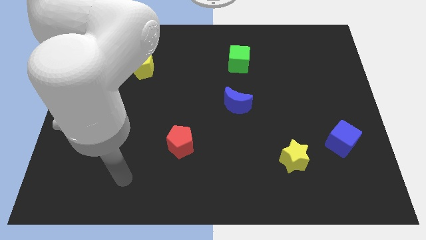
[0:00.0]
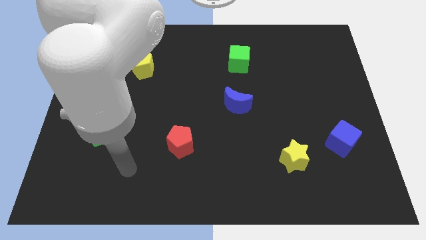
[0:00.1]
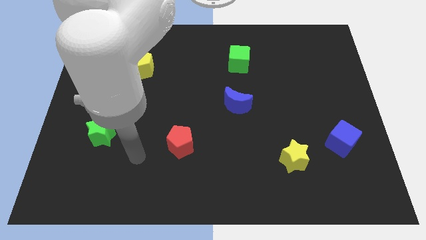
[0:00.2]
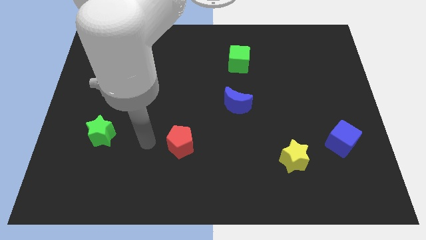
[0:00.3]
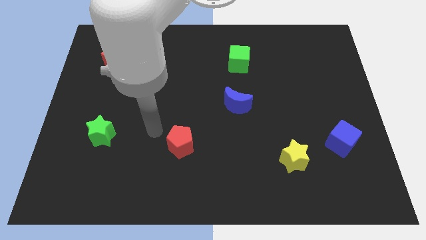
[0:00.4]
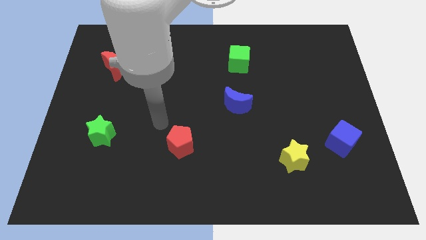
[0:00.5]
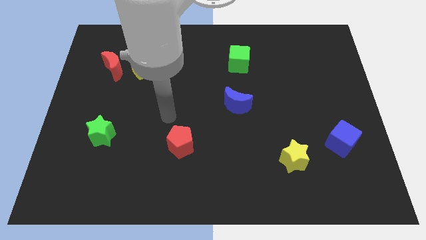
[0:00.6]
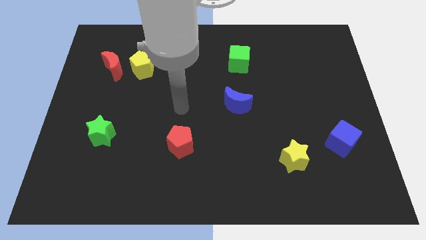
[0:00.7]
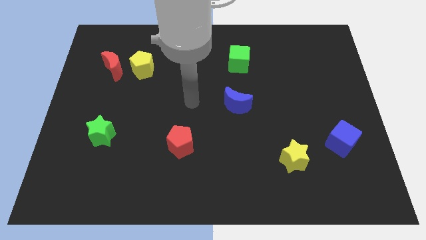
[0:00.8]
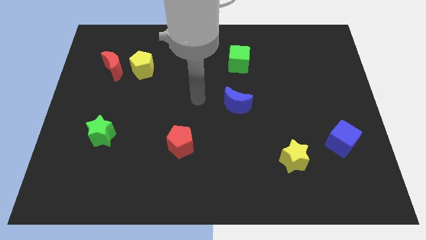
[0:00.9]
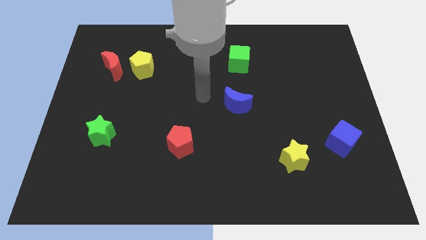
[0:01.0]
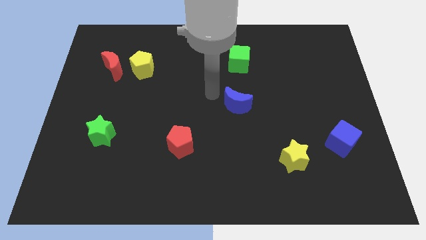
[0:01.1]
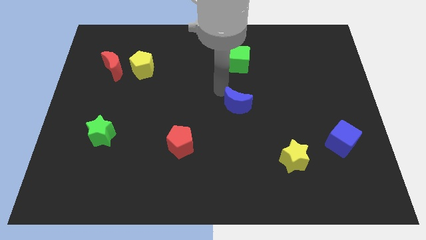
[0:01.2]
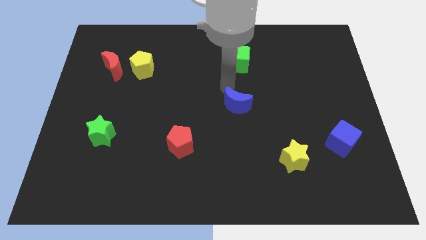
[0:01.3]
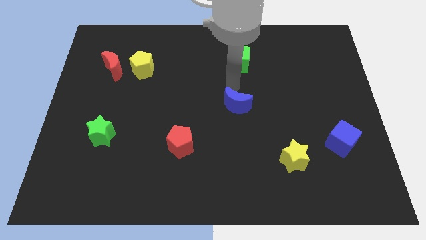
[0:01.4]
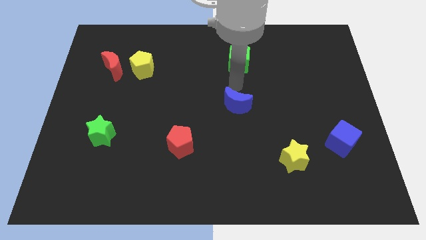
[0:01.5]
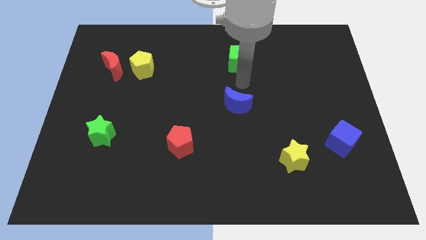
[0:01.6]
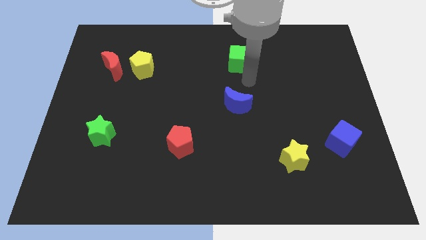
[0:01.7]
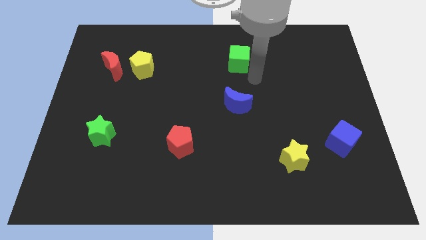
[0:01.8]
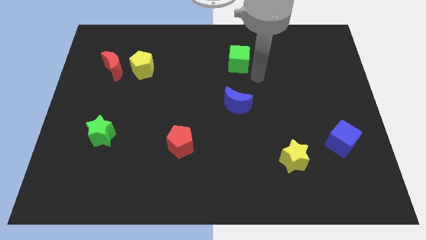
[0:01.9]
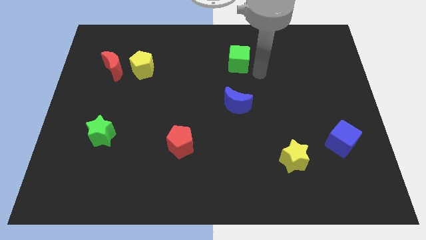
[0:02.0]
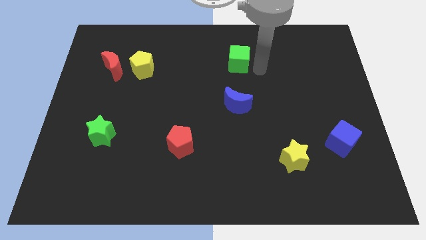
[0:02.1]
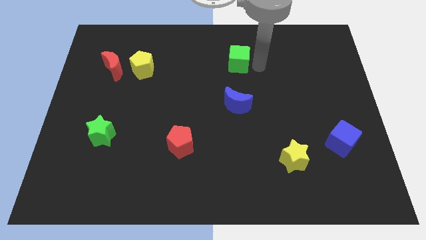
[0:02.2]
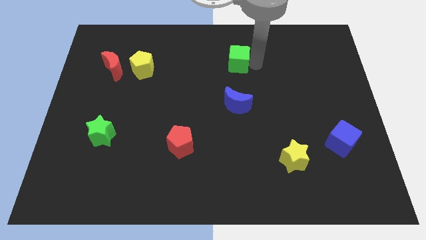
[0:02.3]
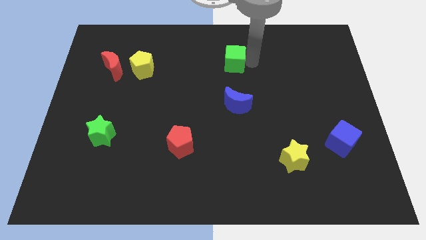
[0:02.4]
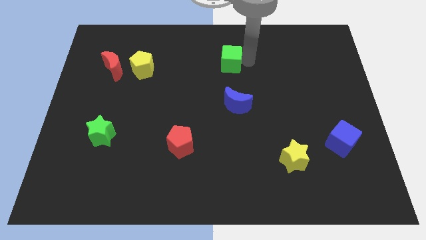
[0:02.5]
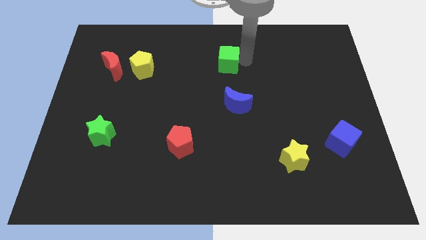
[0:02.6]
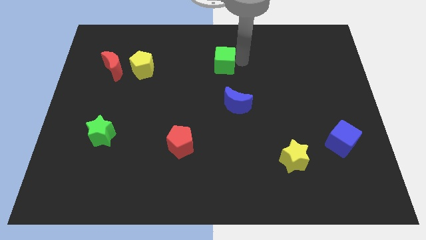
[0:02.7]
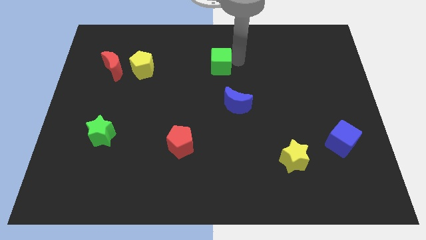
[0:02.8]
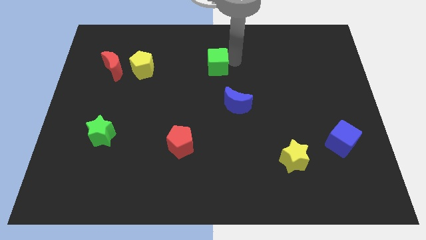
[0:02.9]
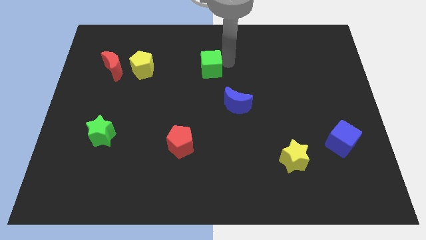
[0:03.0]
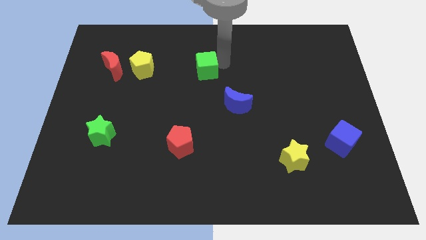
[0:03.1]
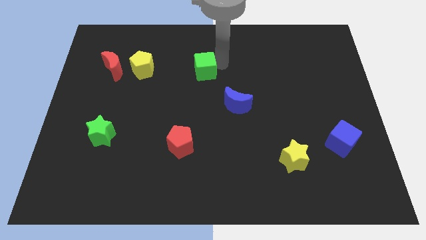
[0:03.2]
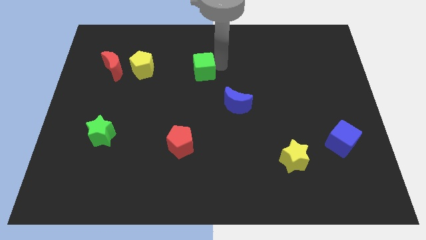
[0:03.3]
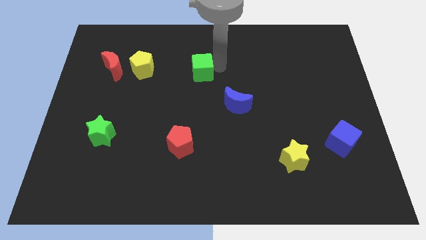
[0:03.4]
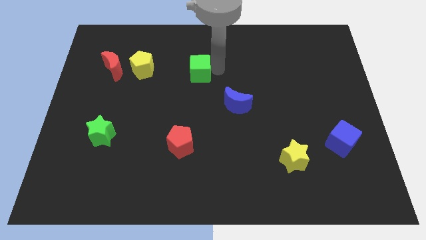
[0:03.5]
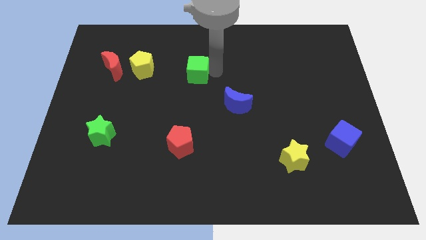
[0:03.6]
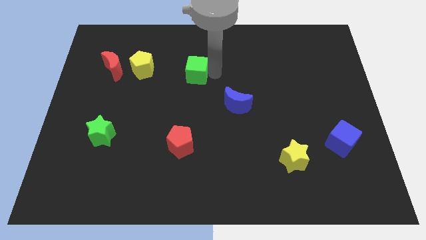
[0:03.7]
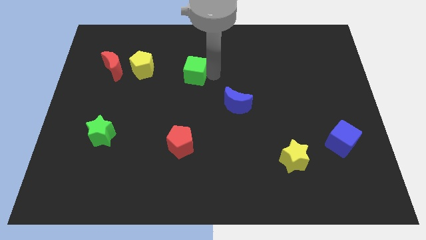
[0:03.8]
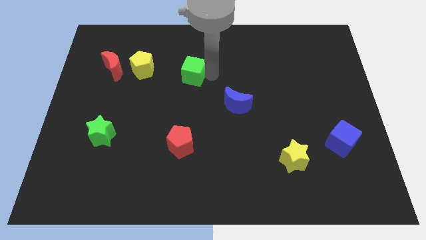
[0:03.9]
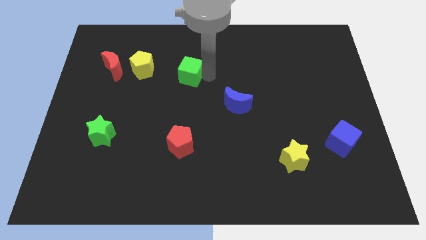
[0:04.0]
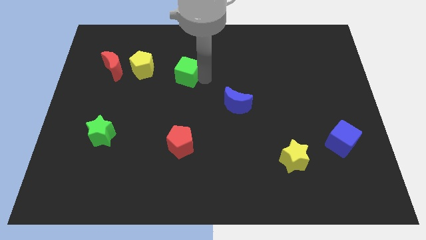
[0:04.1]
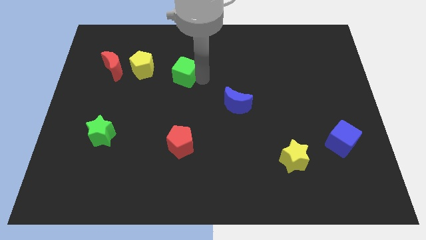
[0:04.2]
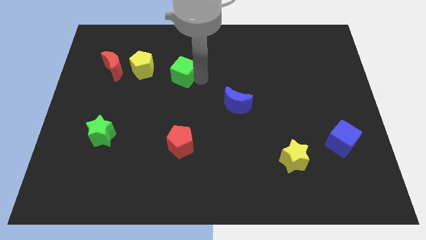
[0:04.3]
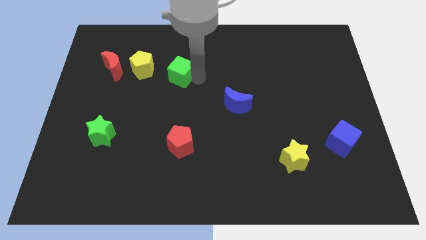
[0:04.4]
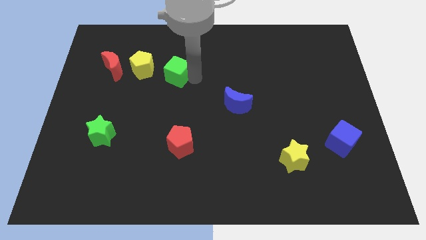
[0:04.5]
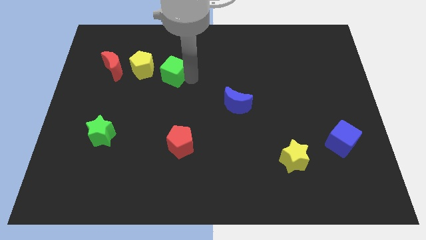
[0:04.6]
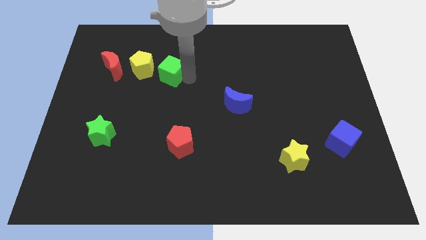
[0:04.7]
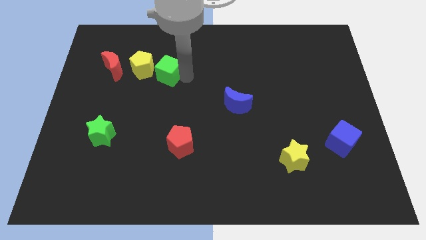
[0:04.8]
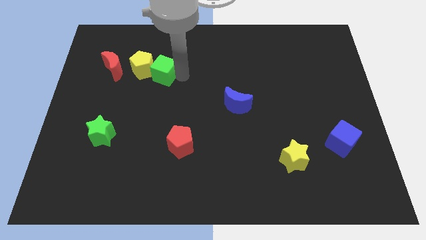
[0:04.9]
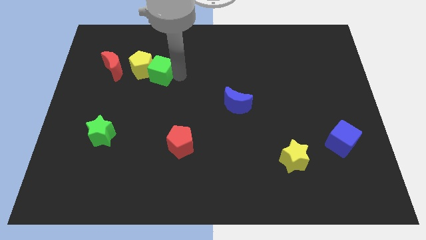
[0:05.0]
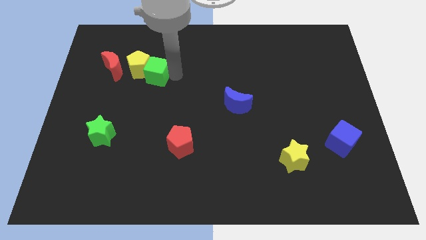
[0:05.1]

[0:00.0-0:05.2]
slide the green cube towards the yellow pentagon

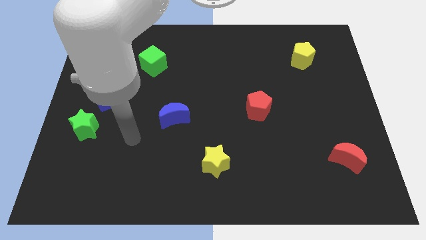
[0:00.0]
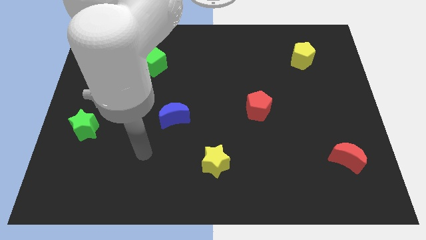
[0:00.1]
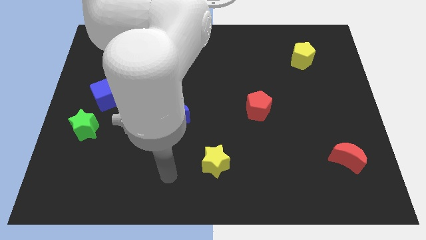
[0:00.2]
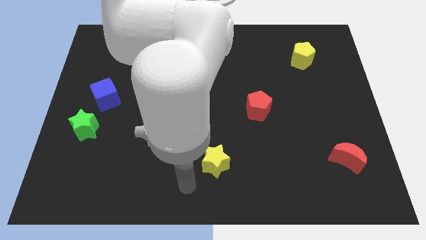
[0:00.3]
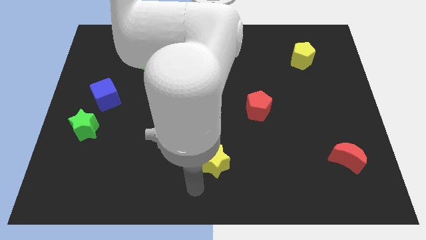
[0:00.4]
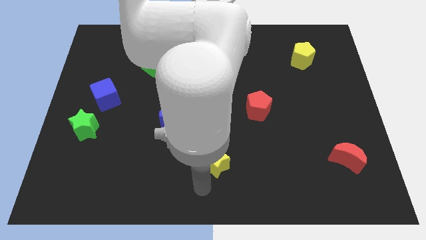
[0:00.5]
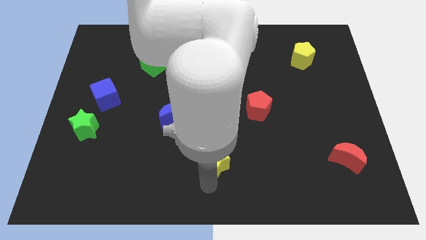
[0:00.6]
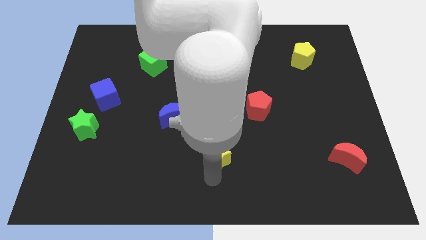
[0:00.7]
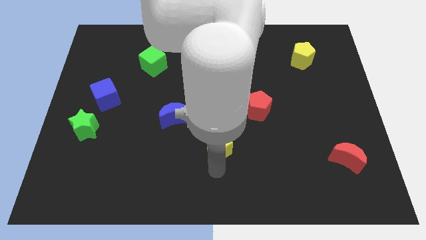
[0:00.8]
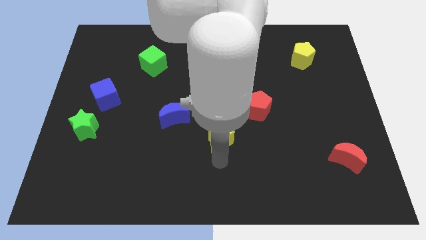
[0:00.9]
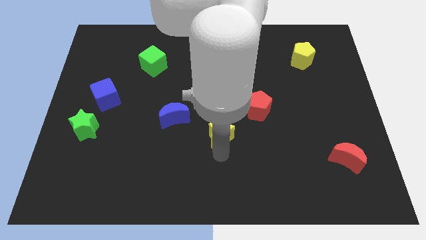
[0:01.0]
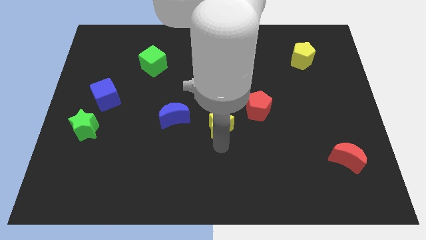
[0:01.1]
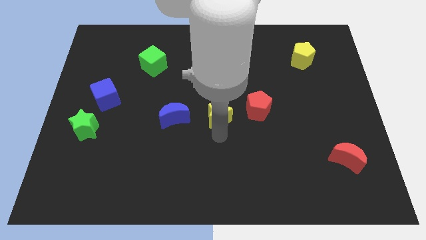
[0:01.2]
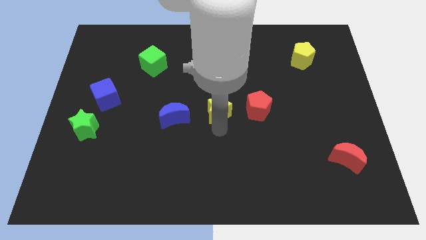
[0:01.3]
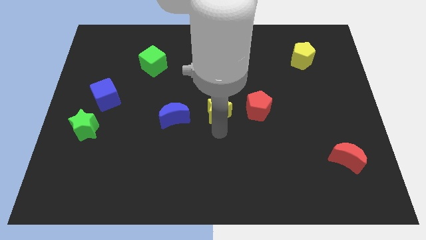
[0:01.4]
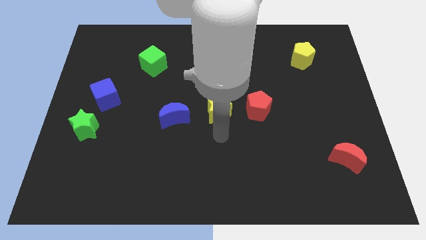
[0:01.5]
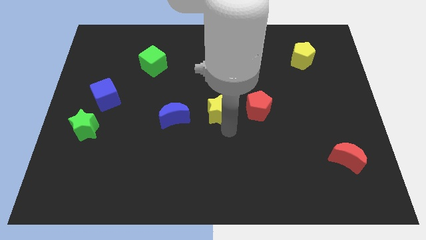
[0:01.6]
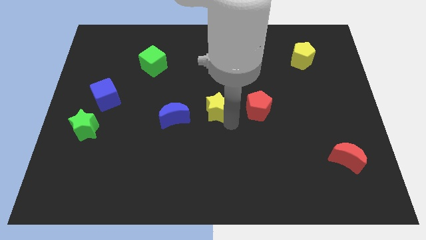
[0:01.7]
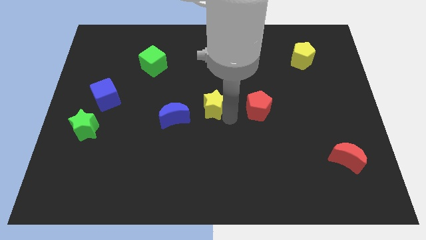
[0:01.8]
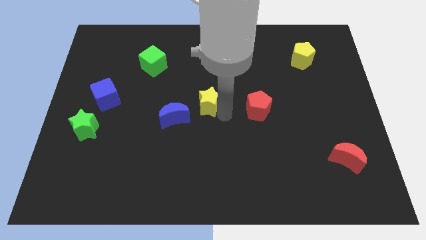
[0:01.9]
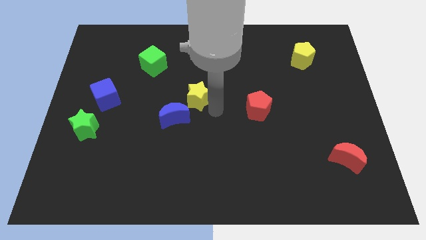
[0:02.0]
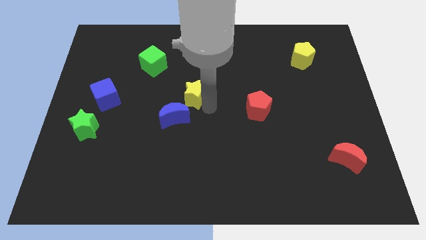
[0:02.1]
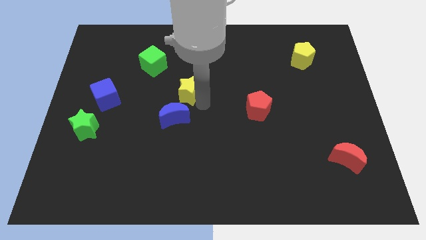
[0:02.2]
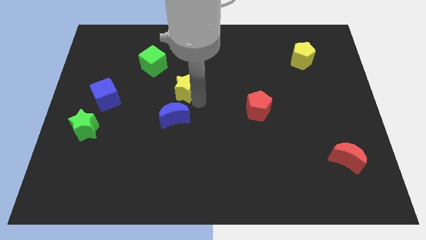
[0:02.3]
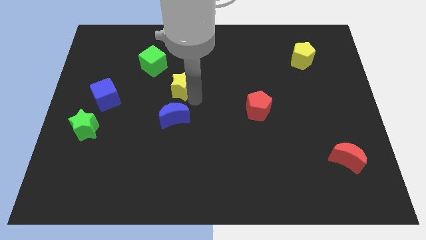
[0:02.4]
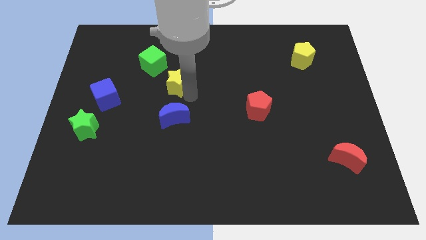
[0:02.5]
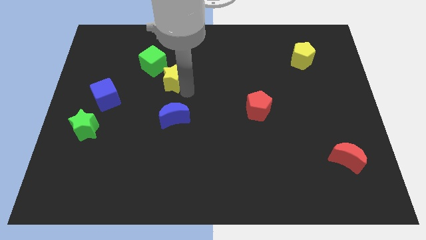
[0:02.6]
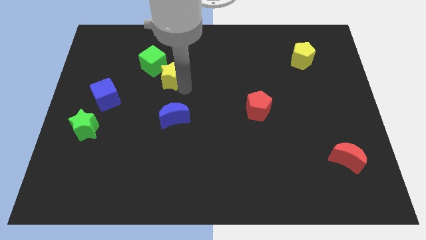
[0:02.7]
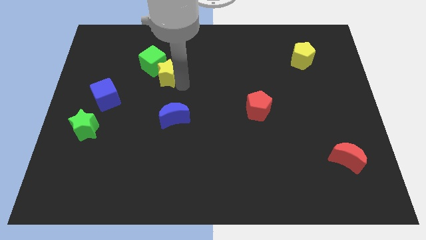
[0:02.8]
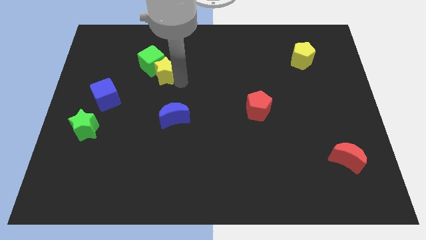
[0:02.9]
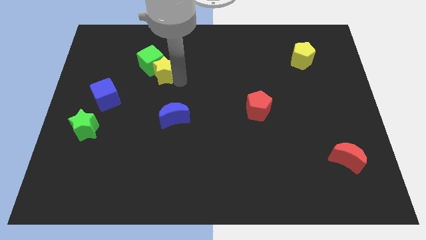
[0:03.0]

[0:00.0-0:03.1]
move the yellow star close to the green cube
